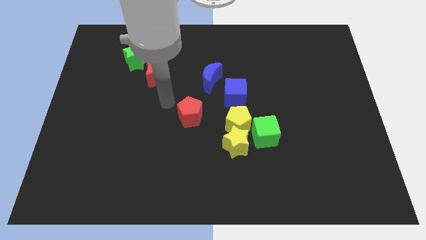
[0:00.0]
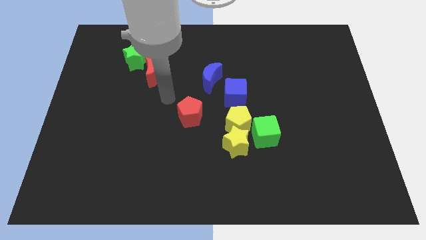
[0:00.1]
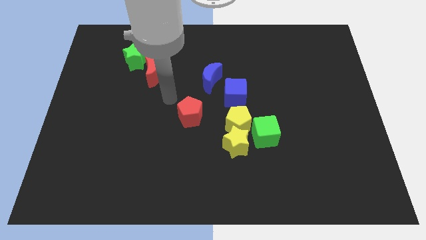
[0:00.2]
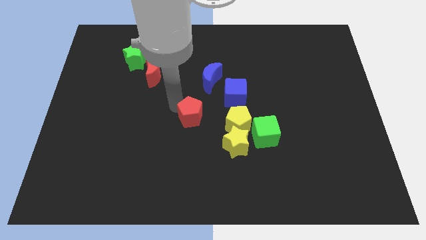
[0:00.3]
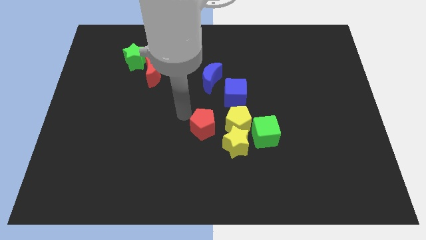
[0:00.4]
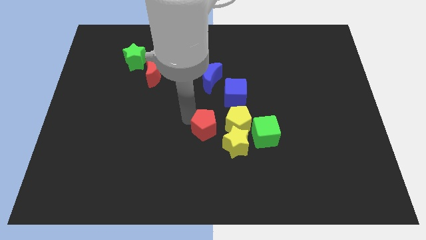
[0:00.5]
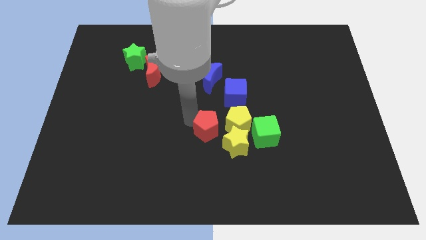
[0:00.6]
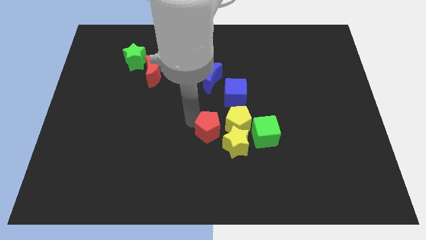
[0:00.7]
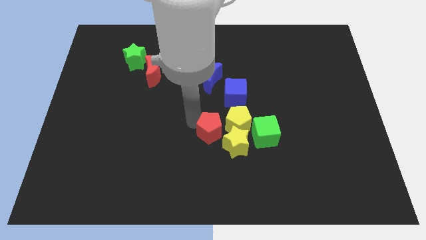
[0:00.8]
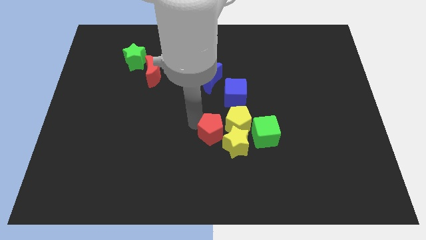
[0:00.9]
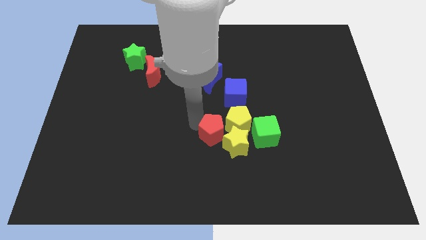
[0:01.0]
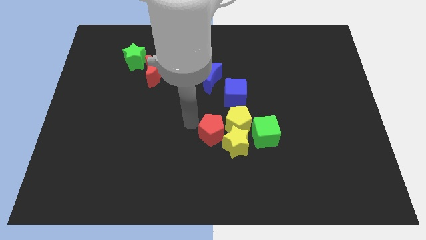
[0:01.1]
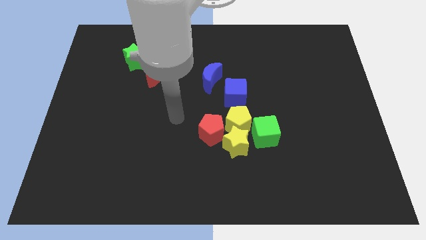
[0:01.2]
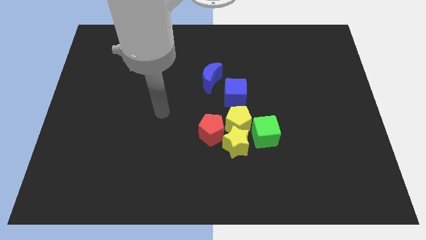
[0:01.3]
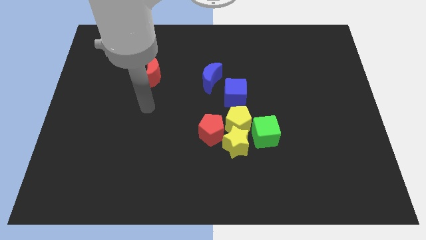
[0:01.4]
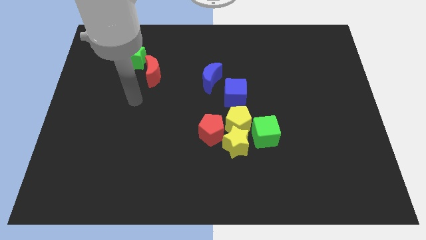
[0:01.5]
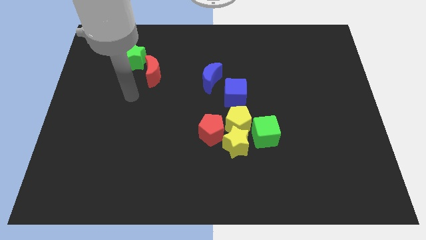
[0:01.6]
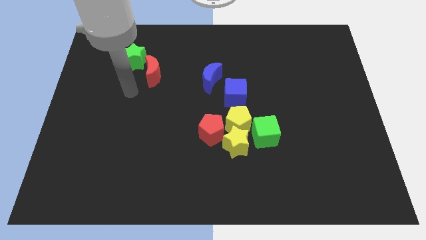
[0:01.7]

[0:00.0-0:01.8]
place the red pentagon to the left of the yellow blocks

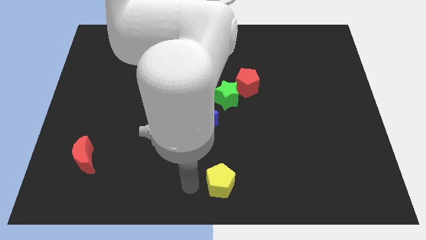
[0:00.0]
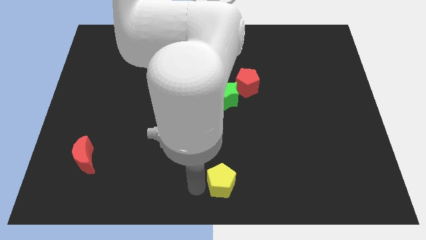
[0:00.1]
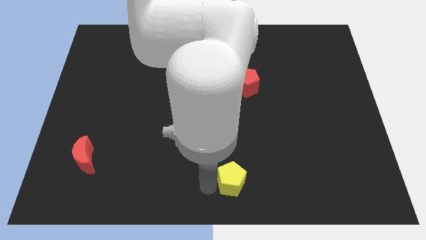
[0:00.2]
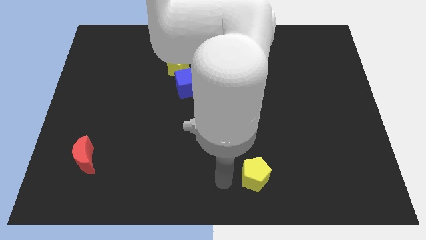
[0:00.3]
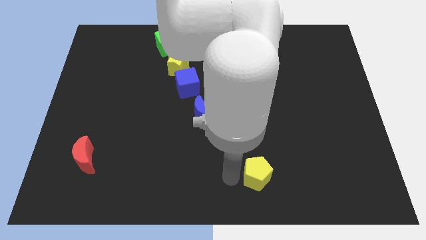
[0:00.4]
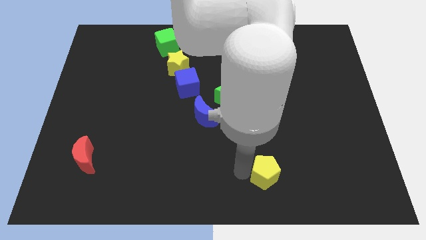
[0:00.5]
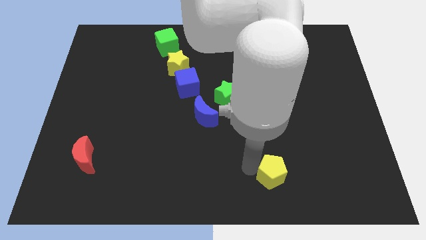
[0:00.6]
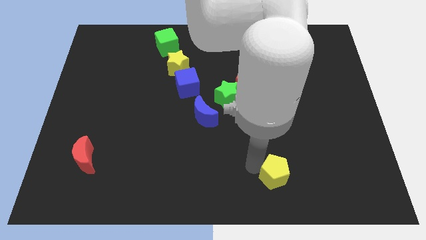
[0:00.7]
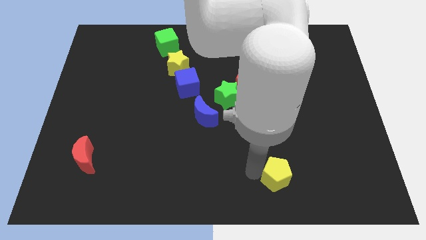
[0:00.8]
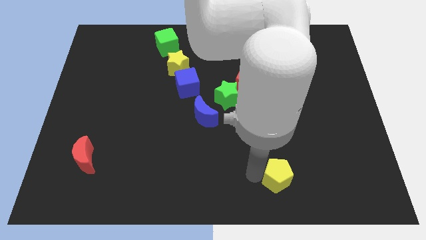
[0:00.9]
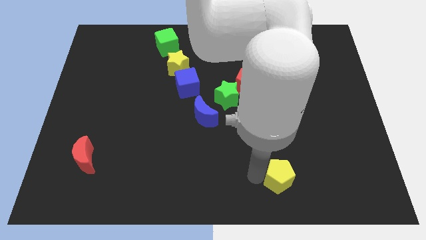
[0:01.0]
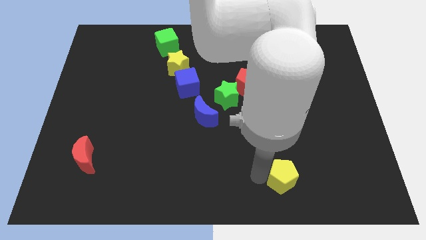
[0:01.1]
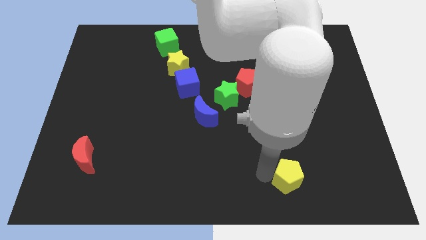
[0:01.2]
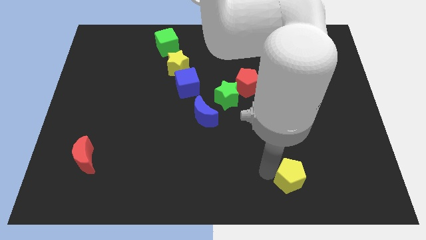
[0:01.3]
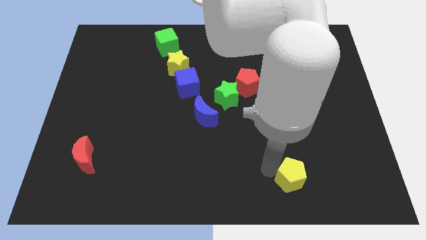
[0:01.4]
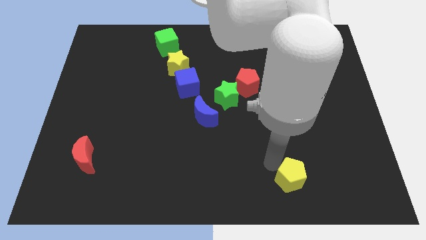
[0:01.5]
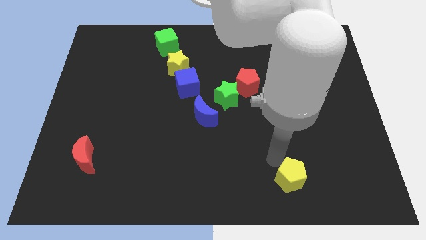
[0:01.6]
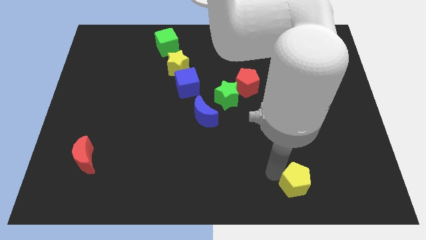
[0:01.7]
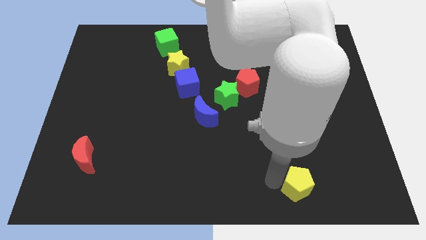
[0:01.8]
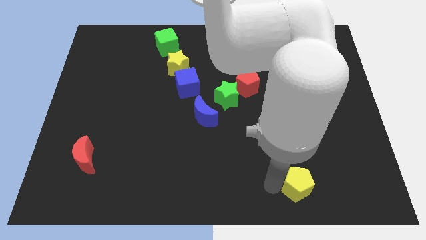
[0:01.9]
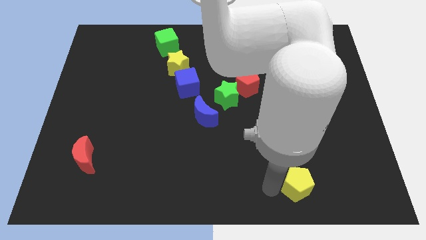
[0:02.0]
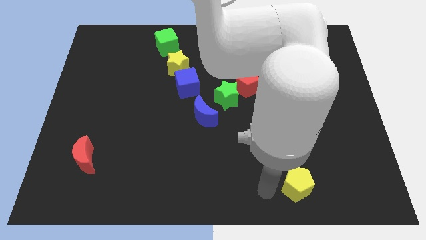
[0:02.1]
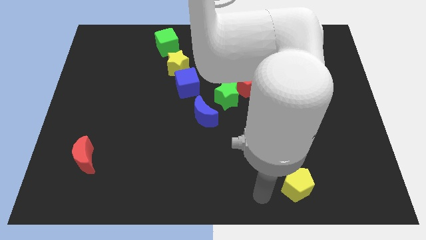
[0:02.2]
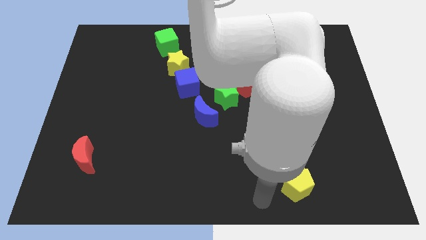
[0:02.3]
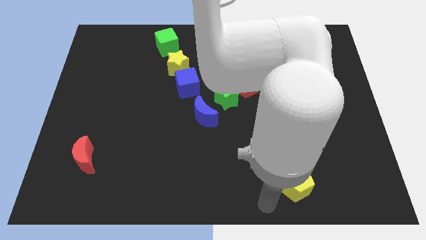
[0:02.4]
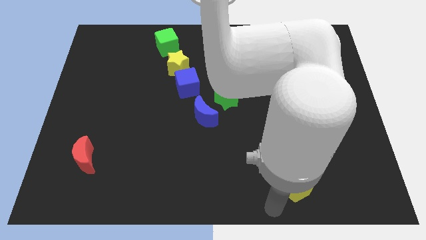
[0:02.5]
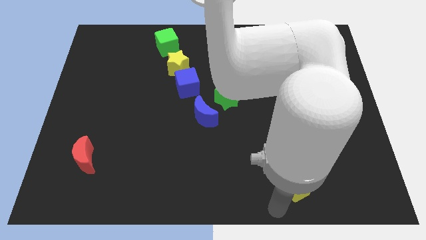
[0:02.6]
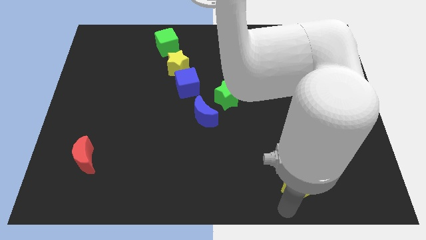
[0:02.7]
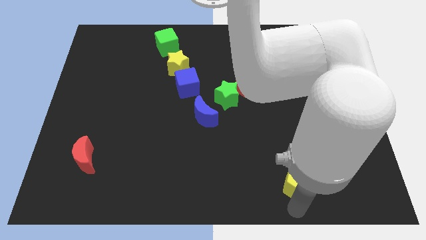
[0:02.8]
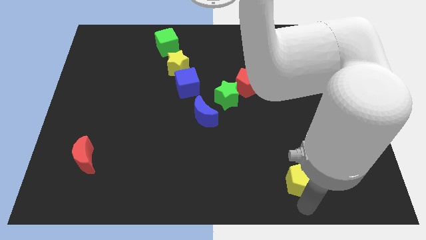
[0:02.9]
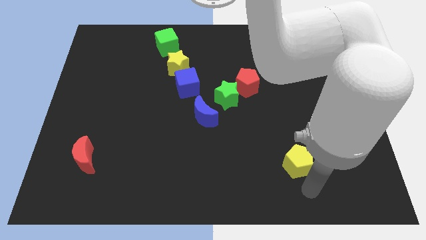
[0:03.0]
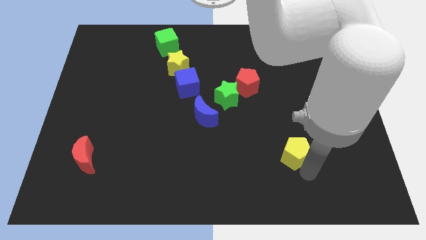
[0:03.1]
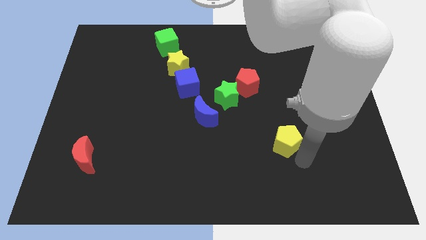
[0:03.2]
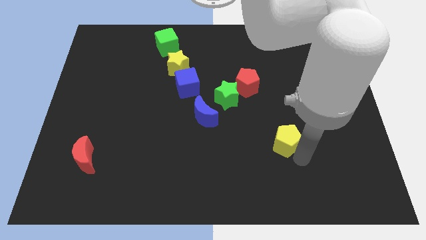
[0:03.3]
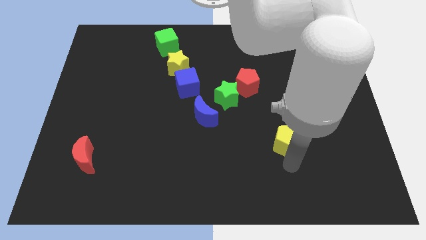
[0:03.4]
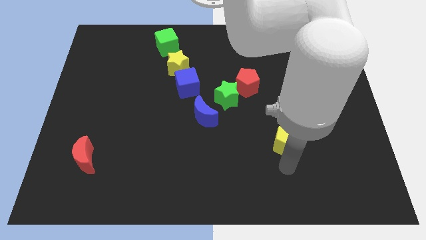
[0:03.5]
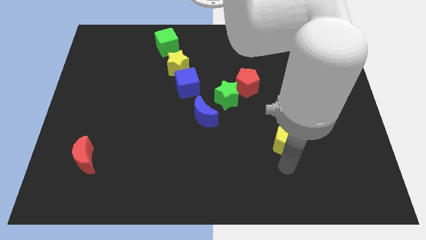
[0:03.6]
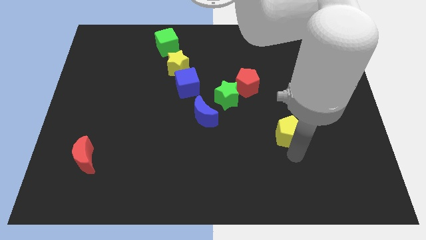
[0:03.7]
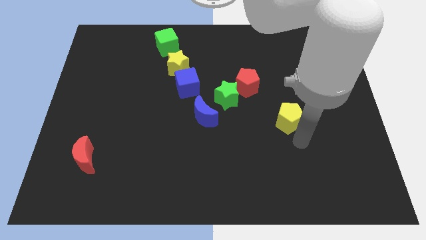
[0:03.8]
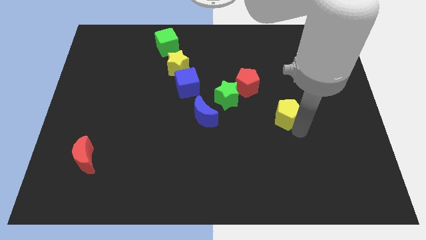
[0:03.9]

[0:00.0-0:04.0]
push the yellow pentagon horizontally to the right side of the blue moon

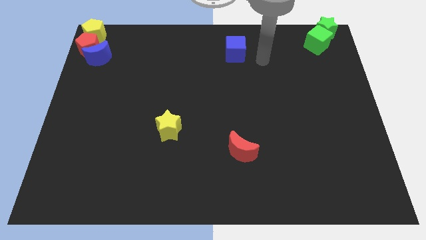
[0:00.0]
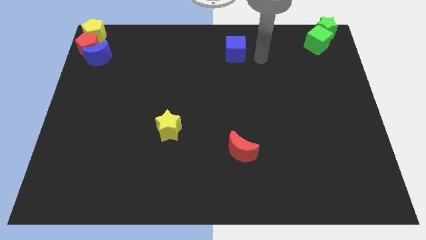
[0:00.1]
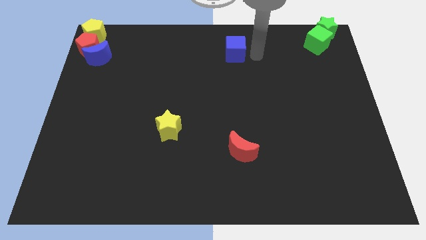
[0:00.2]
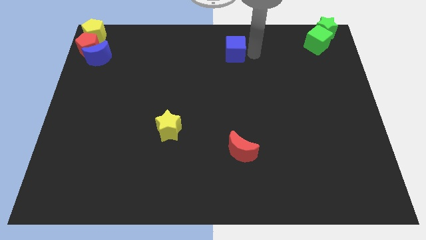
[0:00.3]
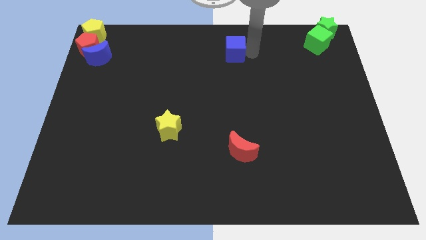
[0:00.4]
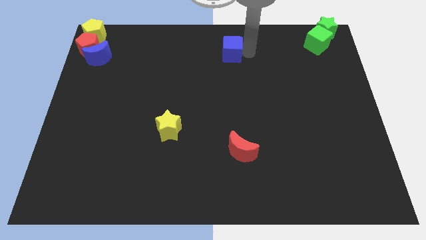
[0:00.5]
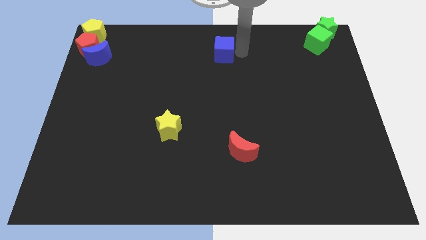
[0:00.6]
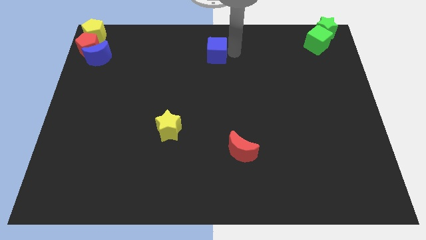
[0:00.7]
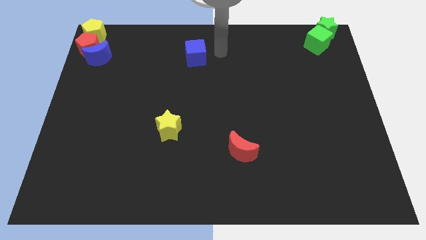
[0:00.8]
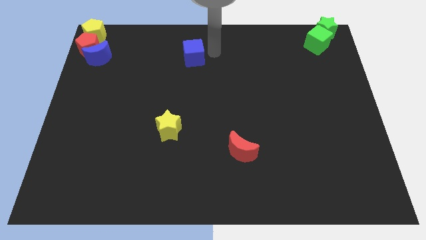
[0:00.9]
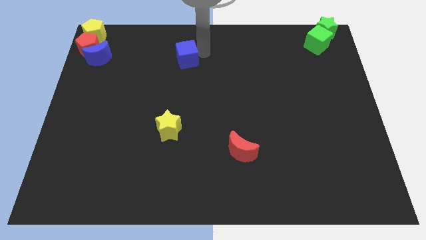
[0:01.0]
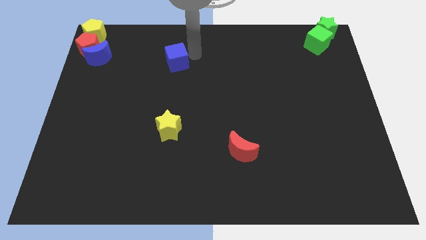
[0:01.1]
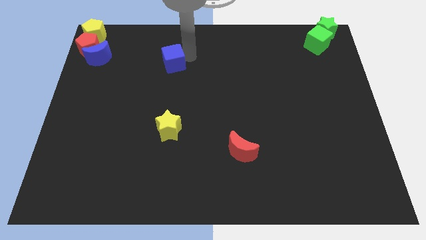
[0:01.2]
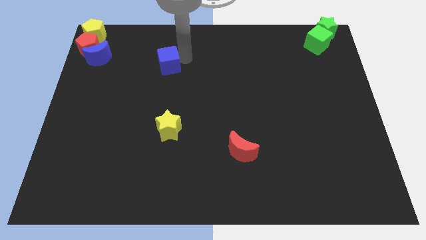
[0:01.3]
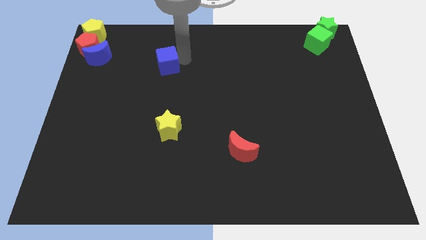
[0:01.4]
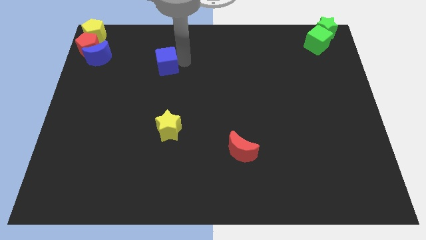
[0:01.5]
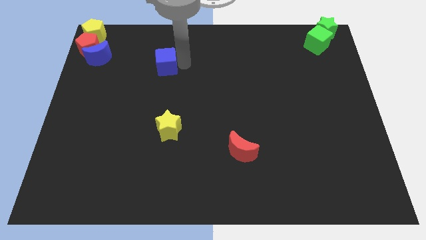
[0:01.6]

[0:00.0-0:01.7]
push the blue cube to the top of the yellow star

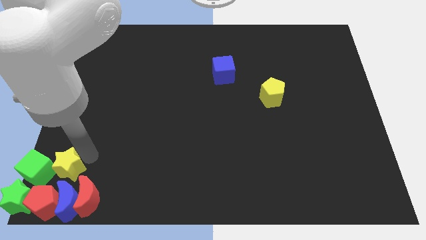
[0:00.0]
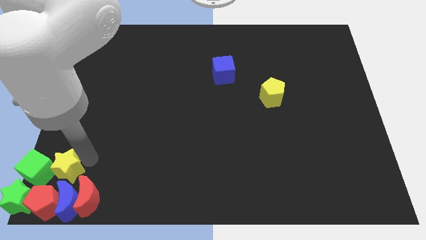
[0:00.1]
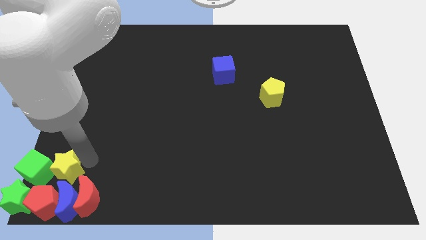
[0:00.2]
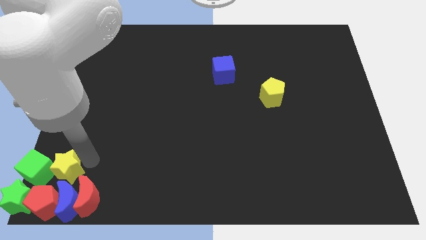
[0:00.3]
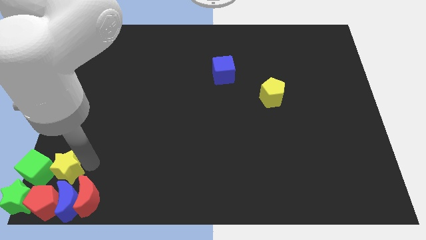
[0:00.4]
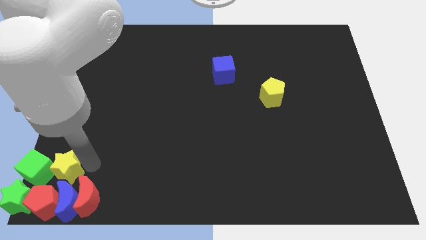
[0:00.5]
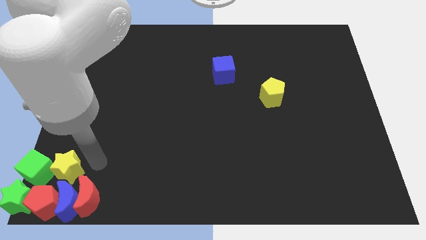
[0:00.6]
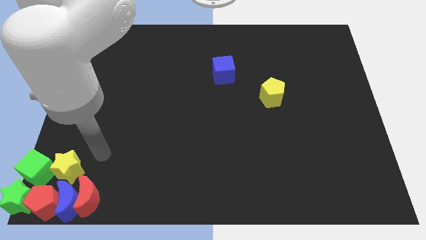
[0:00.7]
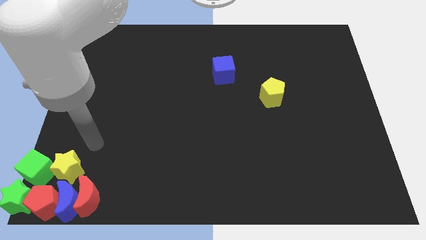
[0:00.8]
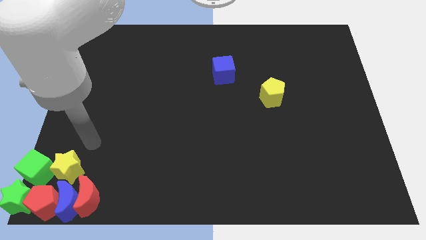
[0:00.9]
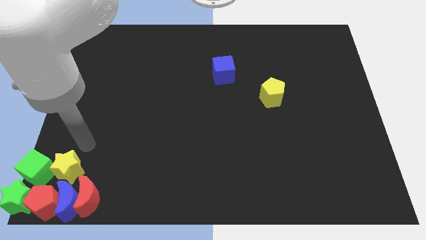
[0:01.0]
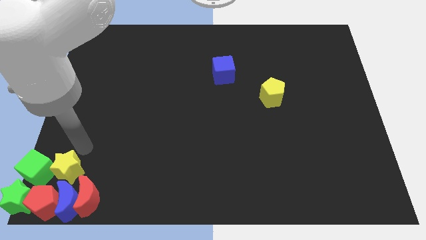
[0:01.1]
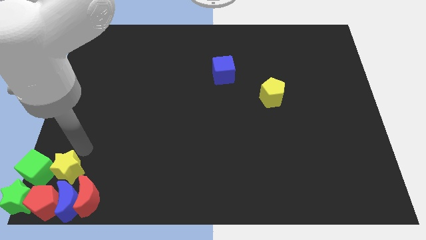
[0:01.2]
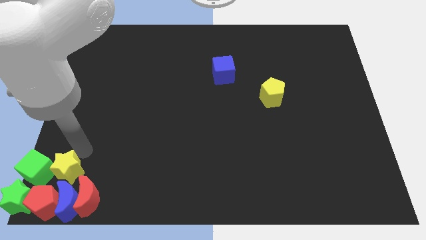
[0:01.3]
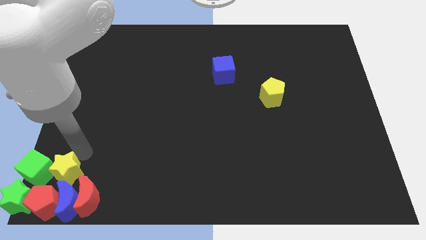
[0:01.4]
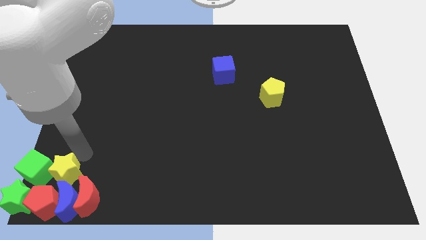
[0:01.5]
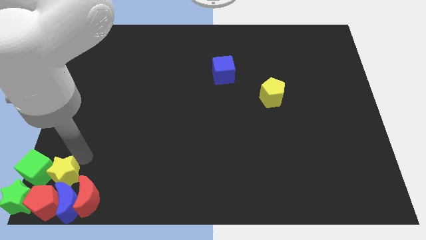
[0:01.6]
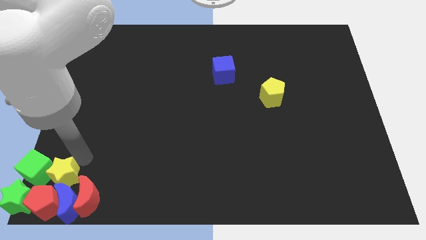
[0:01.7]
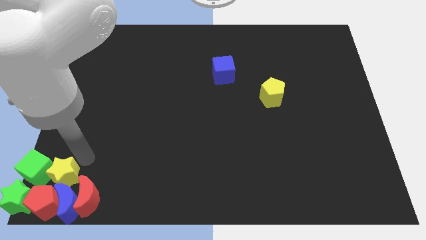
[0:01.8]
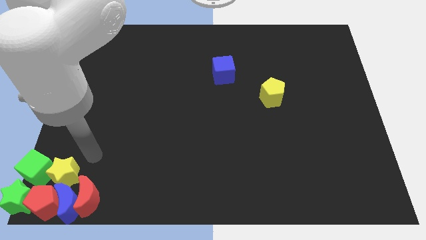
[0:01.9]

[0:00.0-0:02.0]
move the yellow star into the blue crescent
